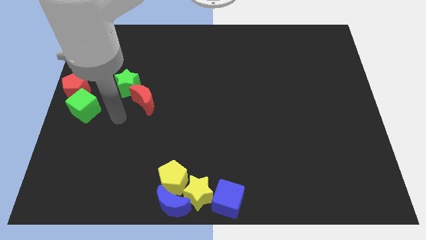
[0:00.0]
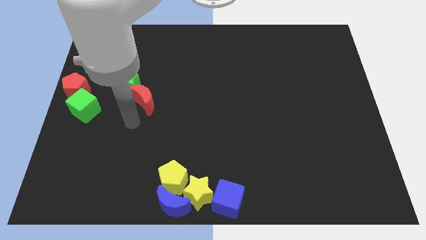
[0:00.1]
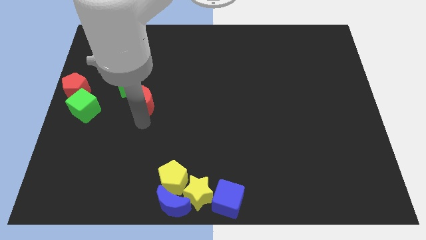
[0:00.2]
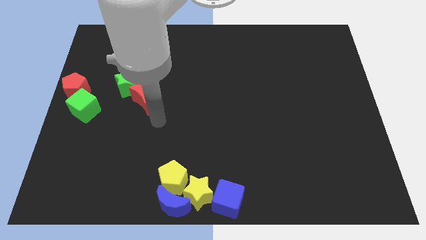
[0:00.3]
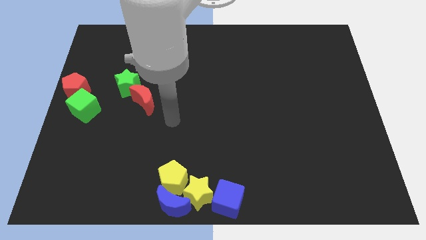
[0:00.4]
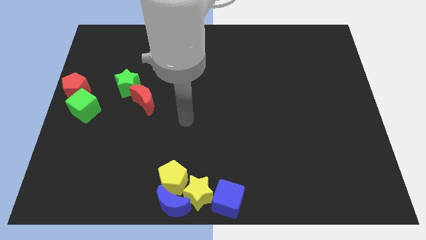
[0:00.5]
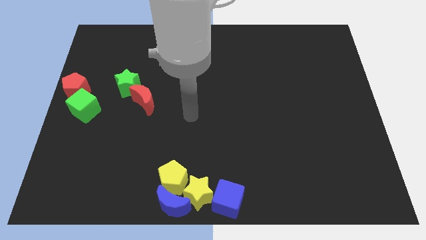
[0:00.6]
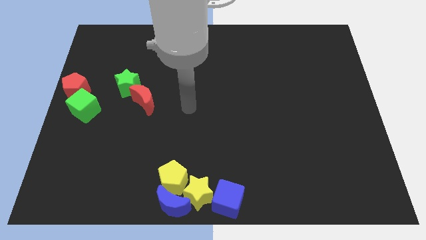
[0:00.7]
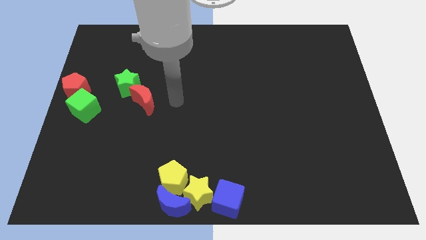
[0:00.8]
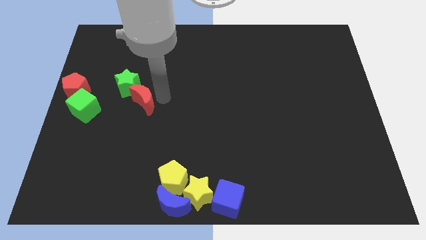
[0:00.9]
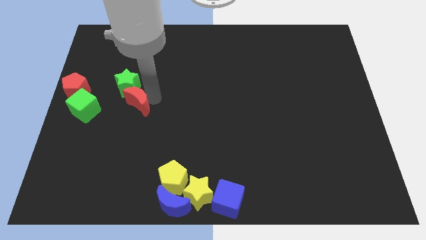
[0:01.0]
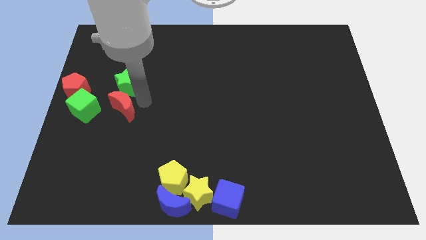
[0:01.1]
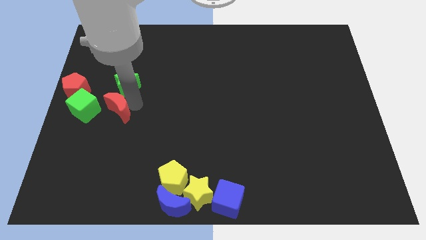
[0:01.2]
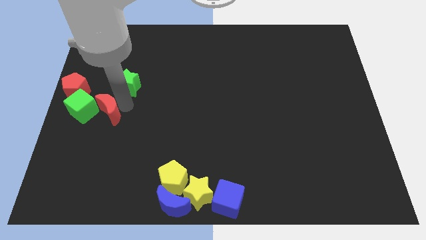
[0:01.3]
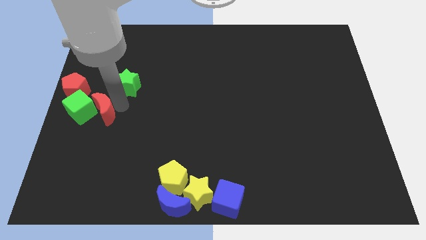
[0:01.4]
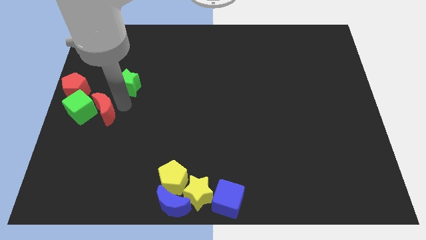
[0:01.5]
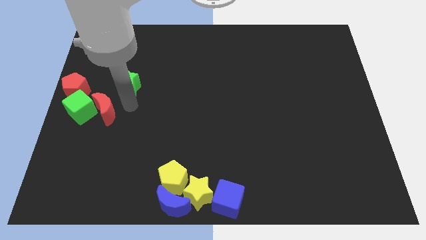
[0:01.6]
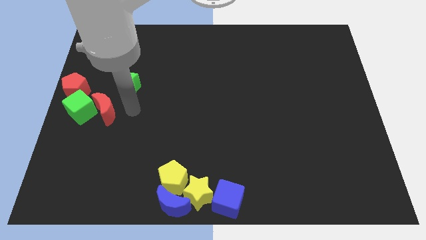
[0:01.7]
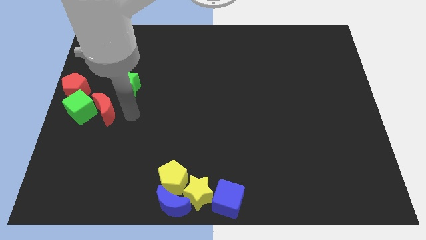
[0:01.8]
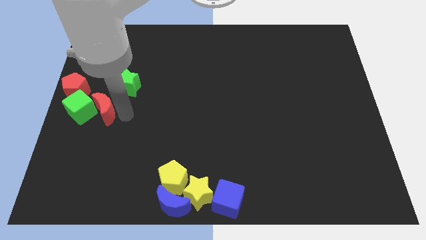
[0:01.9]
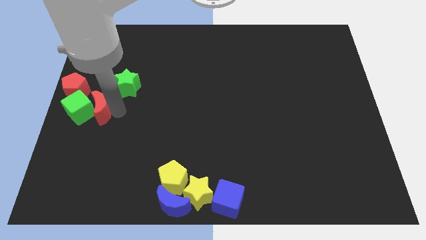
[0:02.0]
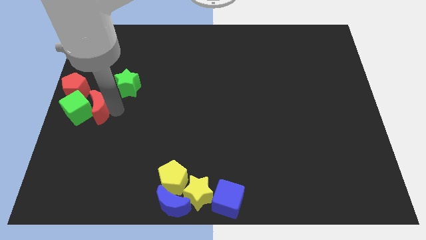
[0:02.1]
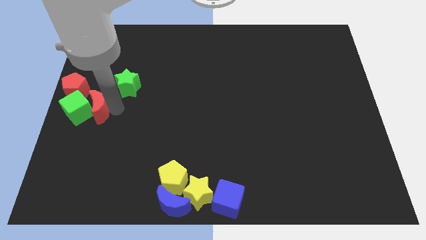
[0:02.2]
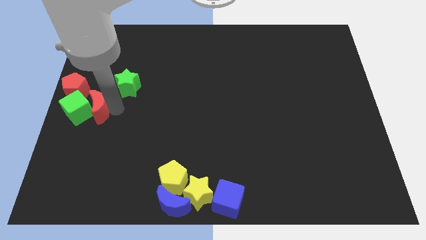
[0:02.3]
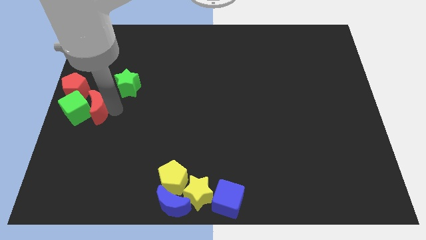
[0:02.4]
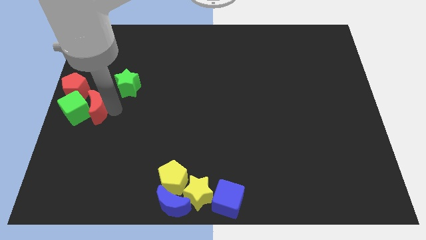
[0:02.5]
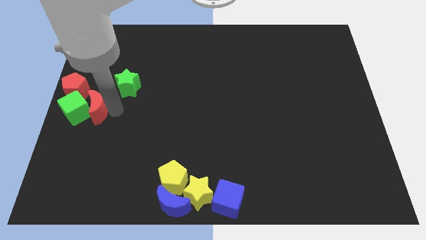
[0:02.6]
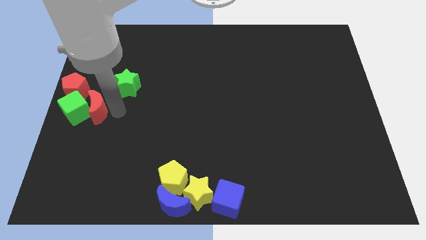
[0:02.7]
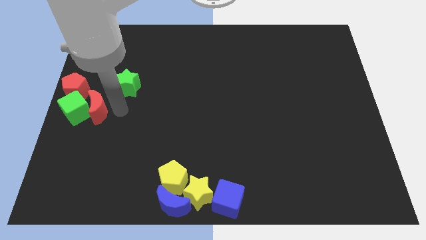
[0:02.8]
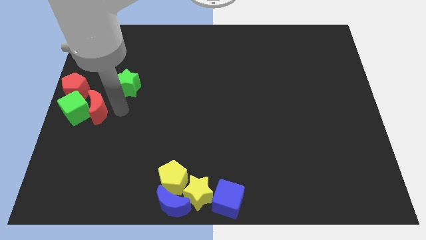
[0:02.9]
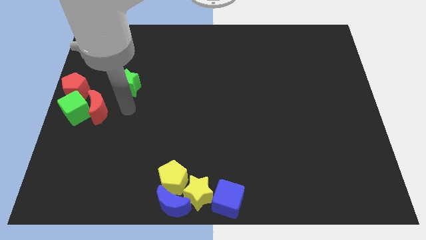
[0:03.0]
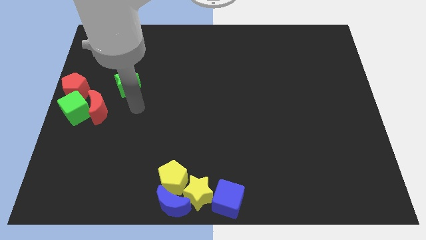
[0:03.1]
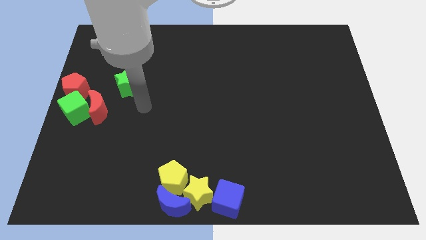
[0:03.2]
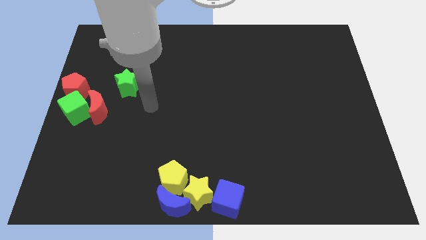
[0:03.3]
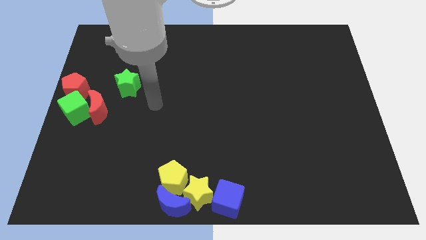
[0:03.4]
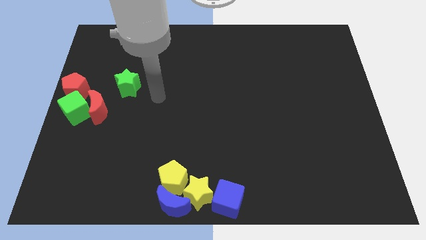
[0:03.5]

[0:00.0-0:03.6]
move the red crescent into the right of the green cube

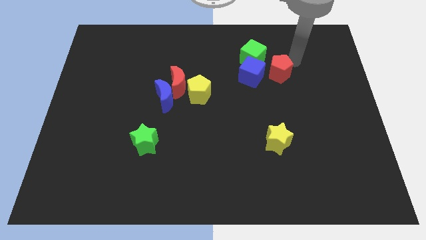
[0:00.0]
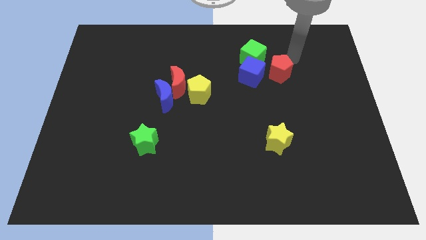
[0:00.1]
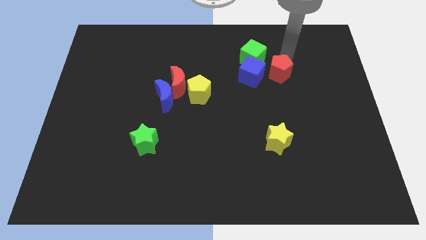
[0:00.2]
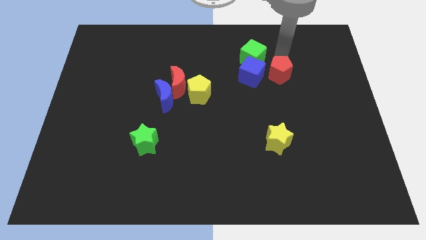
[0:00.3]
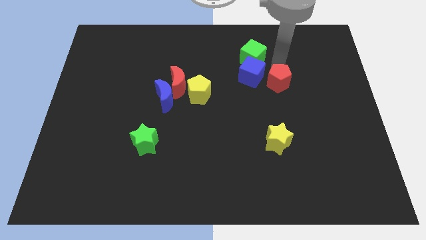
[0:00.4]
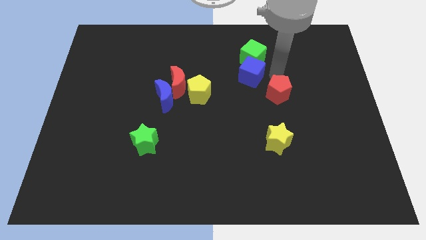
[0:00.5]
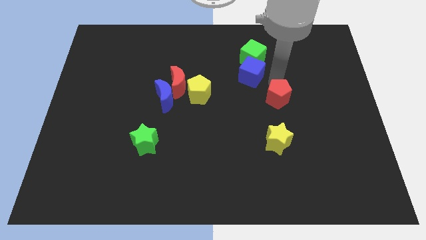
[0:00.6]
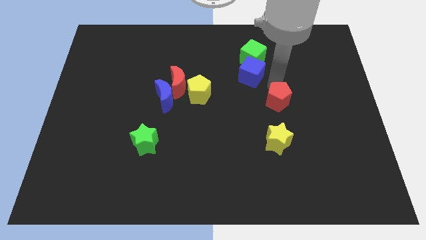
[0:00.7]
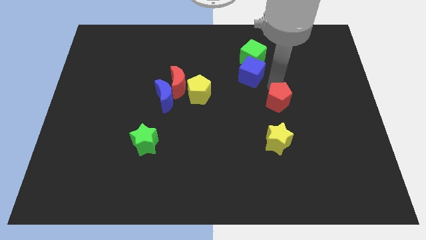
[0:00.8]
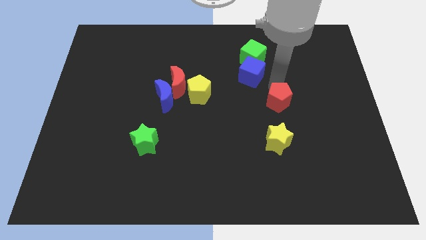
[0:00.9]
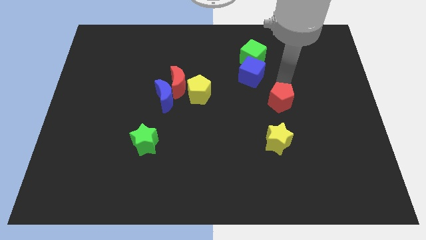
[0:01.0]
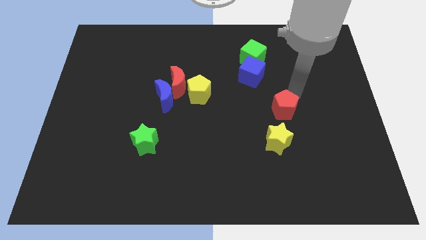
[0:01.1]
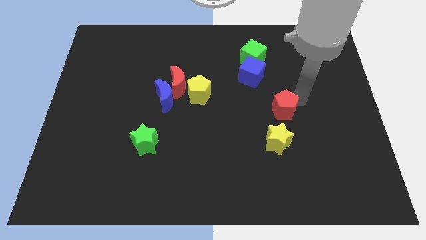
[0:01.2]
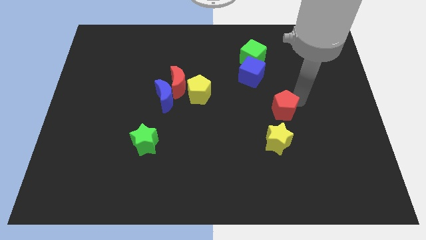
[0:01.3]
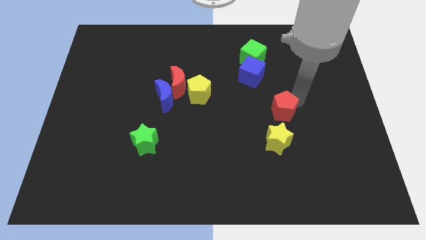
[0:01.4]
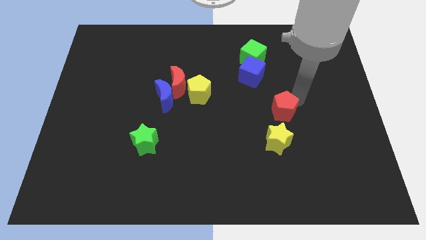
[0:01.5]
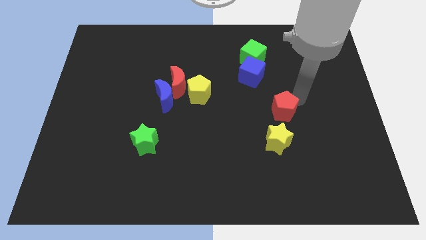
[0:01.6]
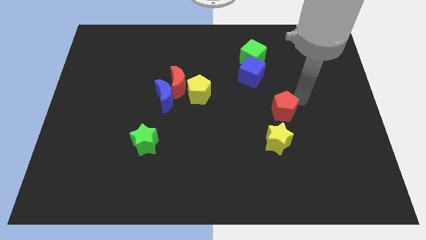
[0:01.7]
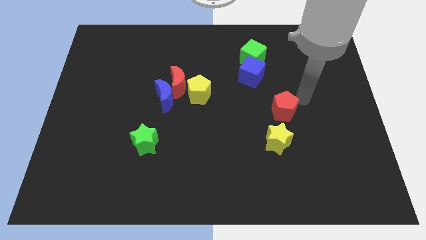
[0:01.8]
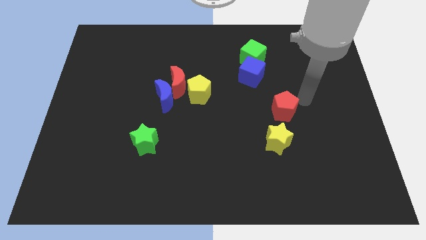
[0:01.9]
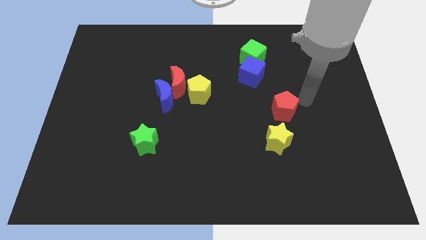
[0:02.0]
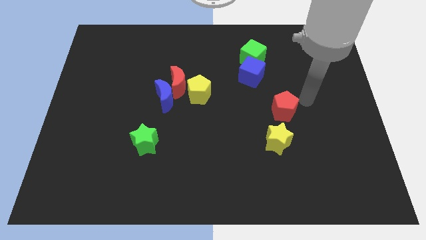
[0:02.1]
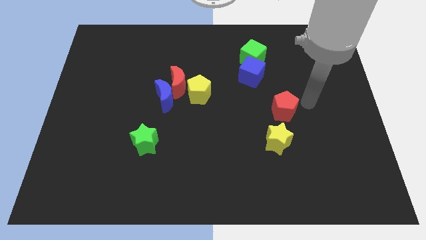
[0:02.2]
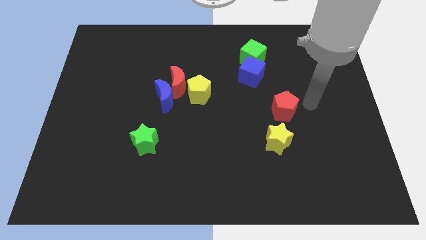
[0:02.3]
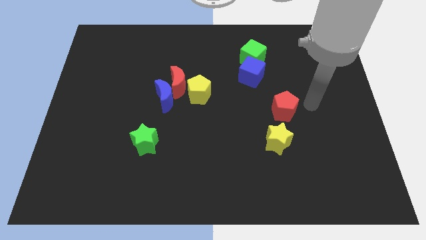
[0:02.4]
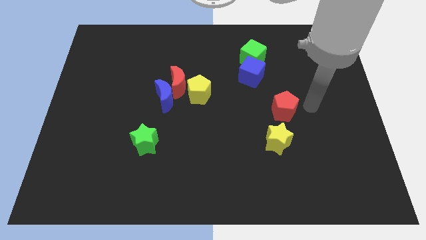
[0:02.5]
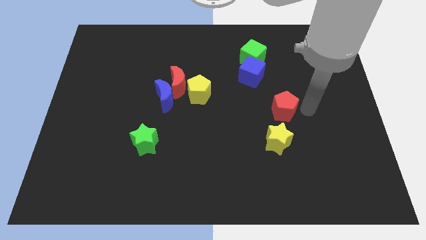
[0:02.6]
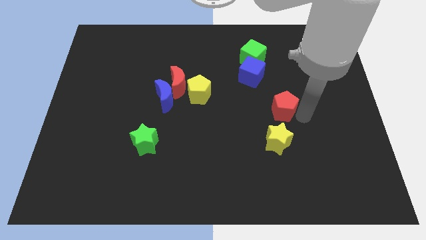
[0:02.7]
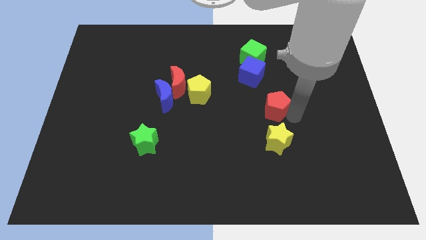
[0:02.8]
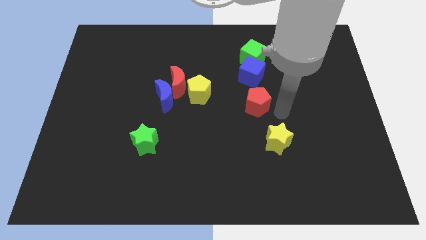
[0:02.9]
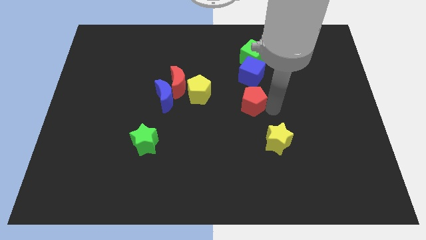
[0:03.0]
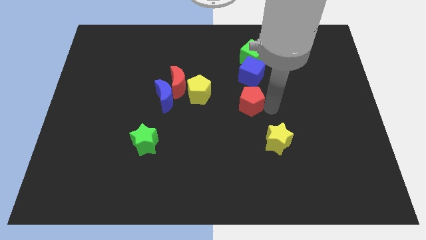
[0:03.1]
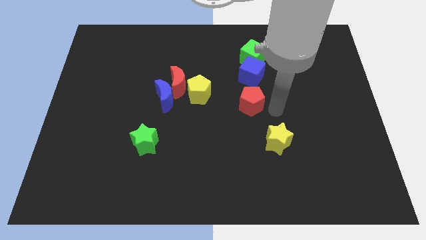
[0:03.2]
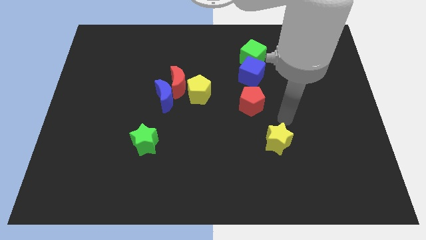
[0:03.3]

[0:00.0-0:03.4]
place the red pentagon at the bottom side of the blue cube

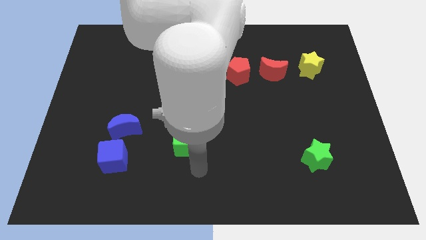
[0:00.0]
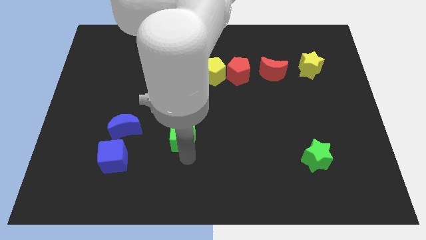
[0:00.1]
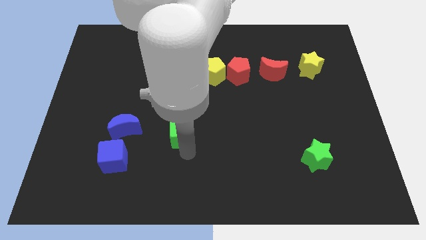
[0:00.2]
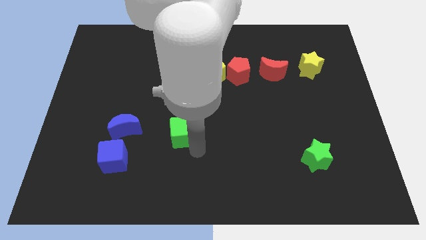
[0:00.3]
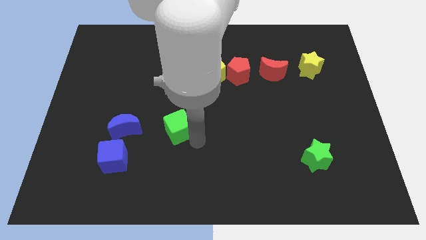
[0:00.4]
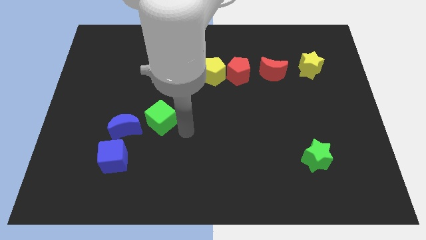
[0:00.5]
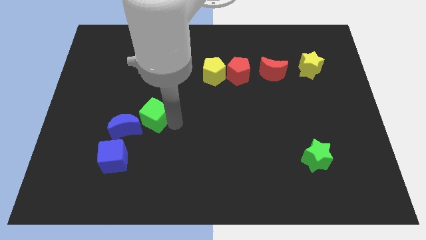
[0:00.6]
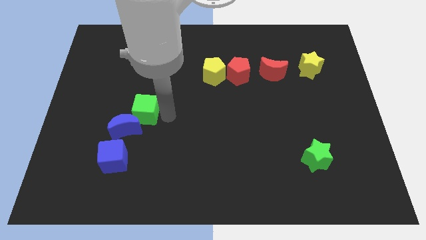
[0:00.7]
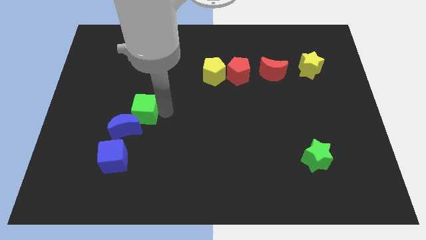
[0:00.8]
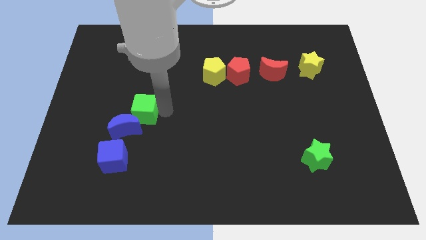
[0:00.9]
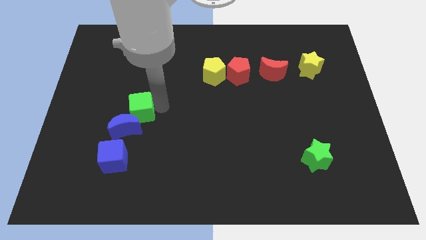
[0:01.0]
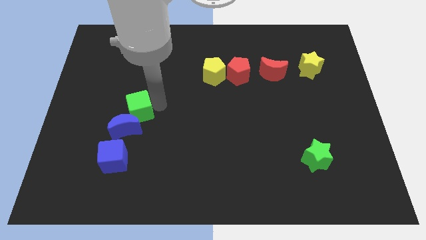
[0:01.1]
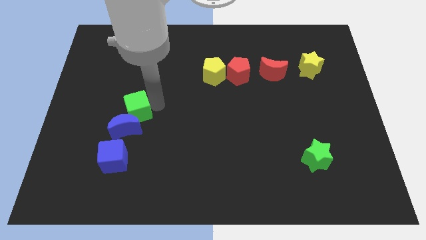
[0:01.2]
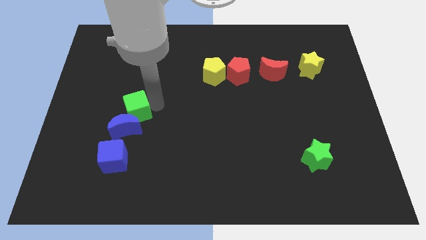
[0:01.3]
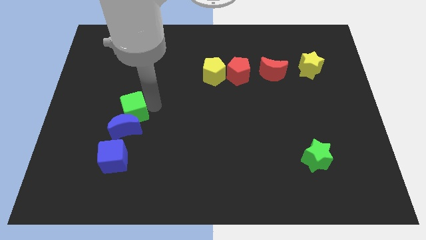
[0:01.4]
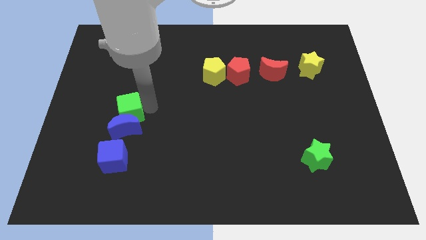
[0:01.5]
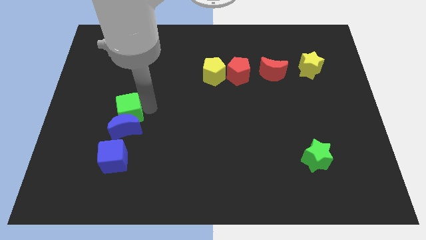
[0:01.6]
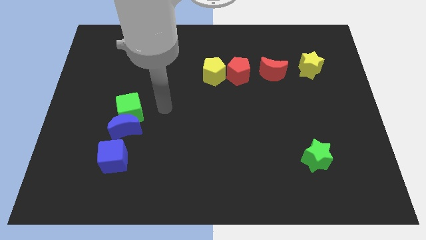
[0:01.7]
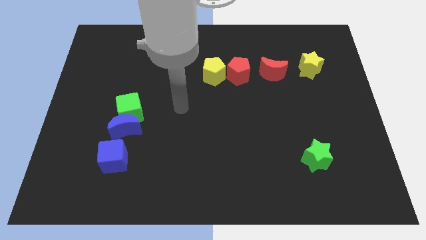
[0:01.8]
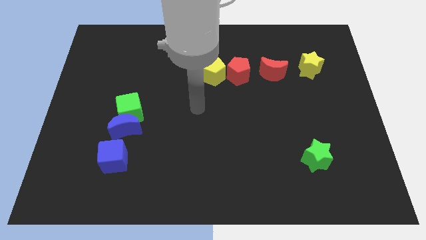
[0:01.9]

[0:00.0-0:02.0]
move the green cube center left of the board
